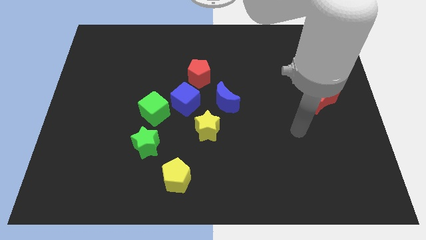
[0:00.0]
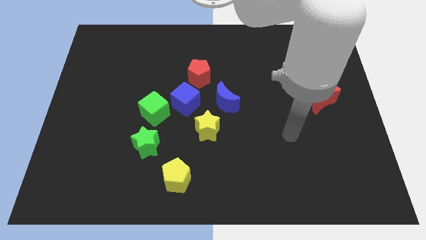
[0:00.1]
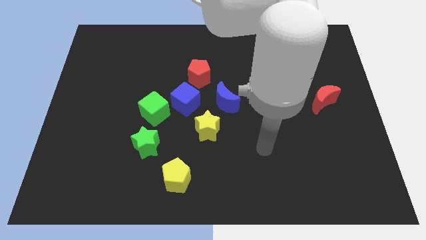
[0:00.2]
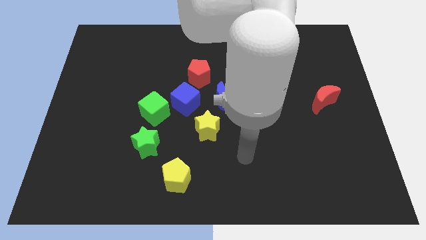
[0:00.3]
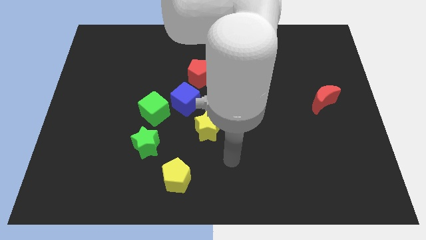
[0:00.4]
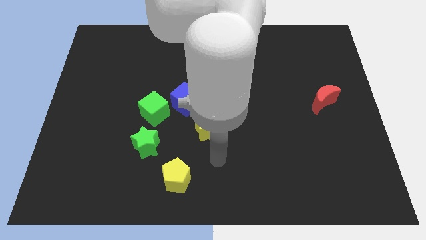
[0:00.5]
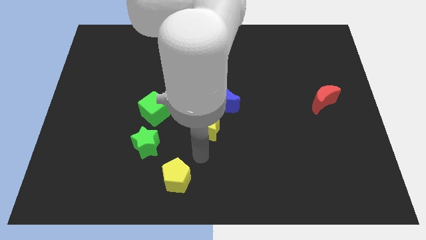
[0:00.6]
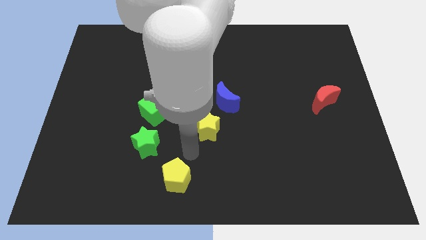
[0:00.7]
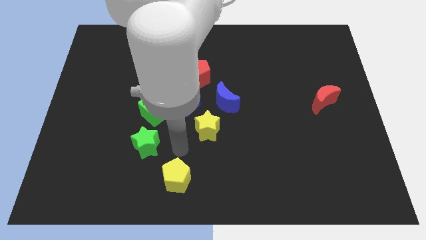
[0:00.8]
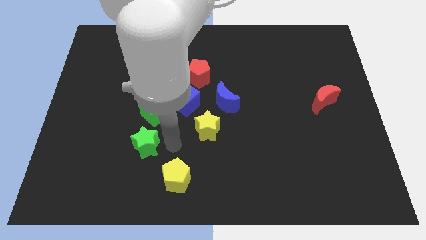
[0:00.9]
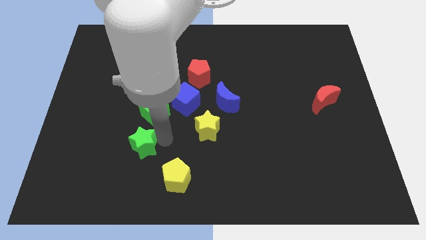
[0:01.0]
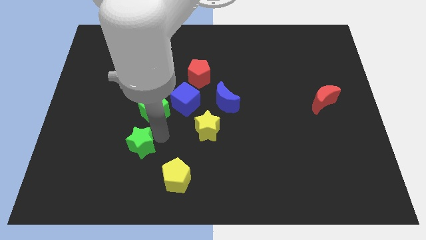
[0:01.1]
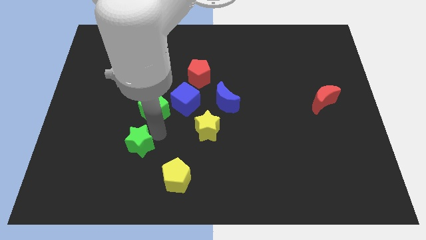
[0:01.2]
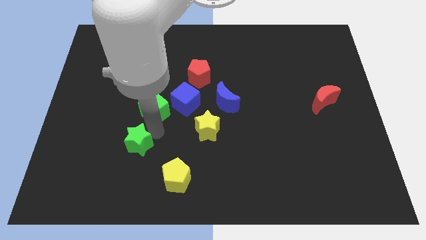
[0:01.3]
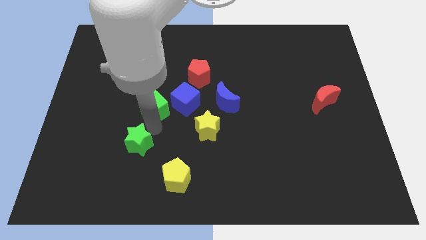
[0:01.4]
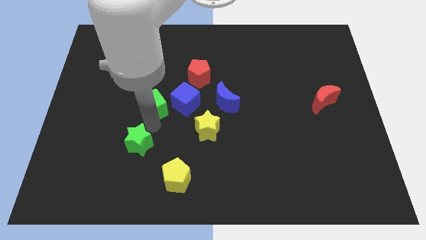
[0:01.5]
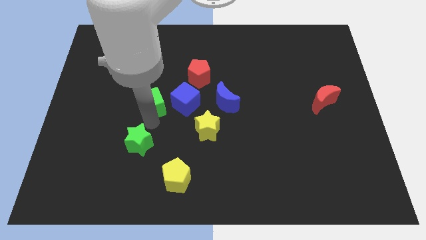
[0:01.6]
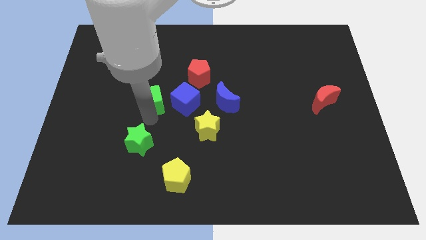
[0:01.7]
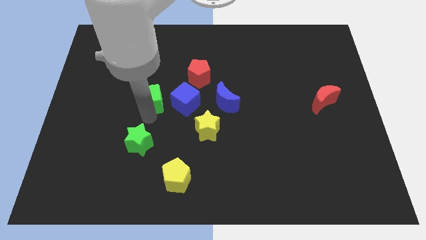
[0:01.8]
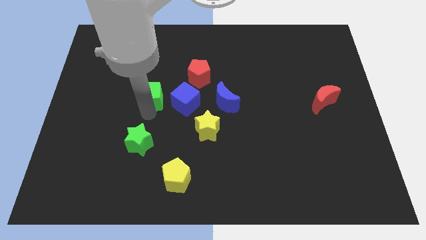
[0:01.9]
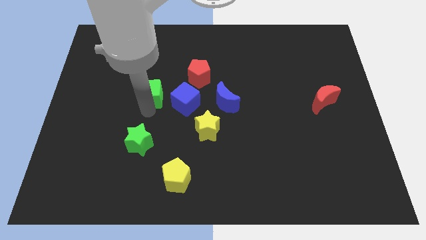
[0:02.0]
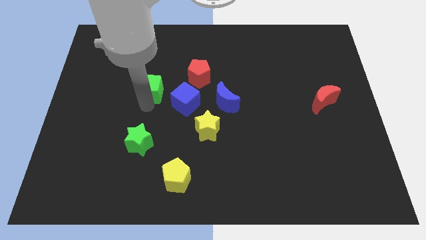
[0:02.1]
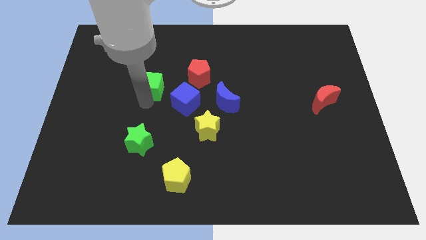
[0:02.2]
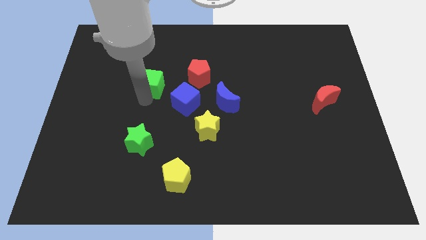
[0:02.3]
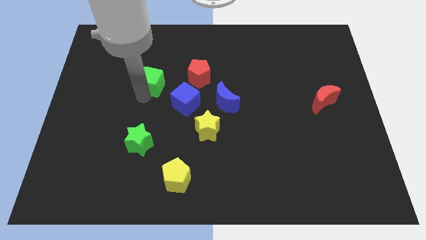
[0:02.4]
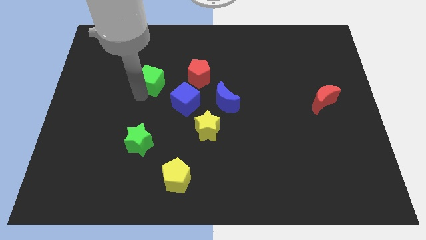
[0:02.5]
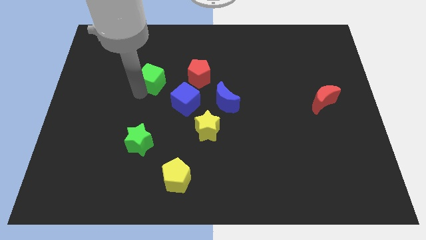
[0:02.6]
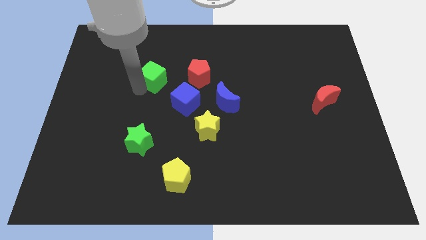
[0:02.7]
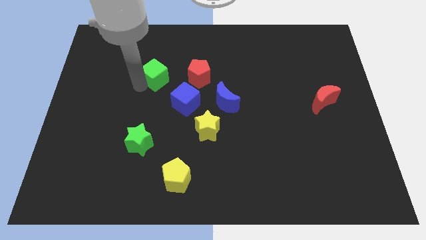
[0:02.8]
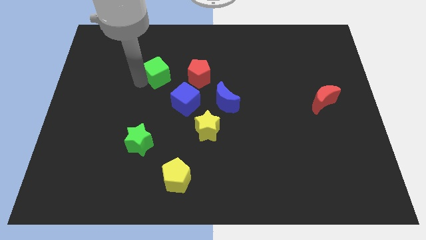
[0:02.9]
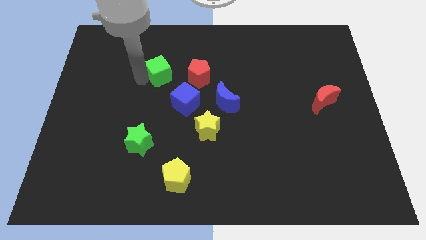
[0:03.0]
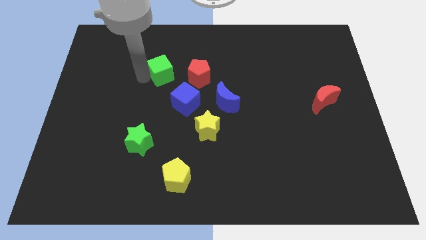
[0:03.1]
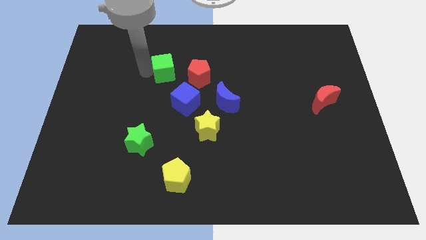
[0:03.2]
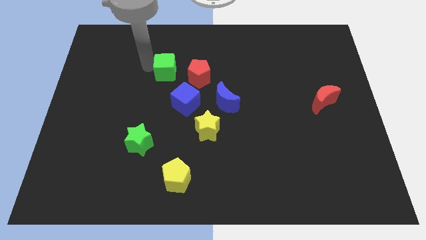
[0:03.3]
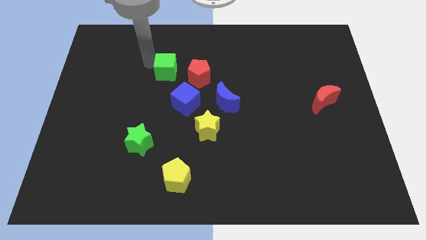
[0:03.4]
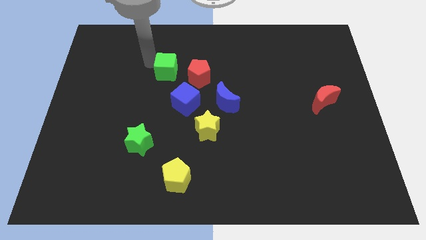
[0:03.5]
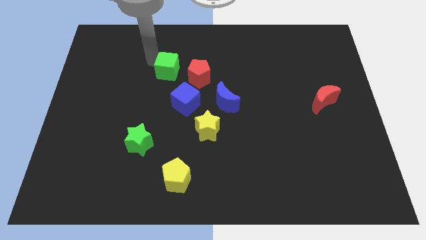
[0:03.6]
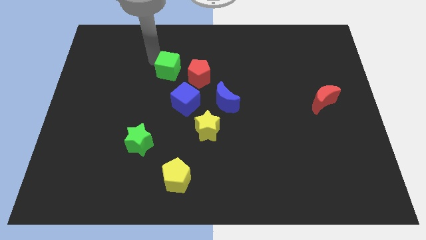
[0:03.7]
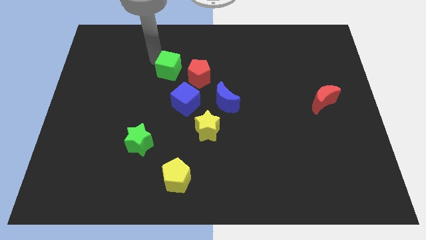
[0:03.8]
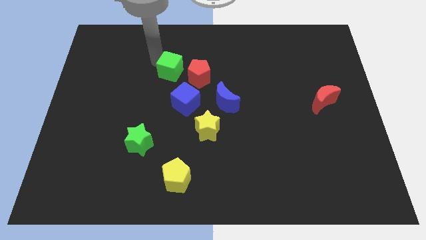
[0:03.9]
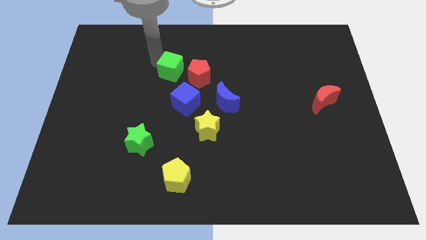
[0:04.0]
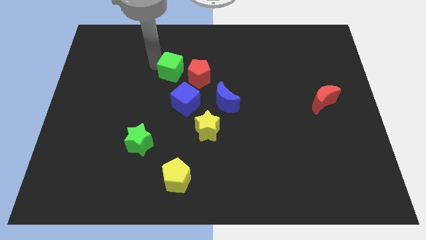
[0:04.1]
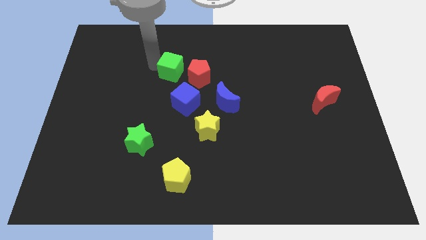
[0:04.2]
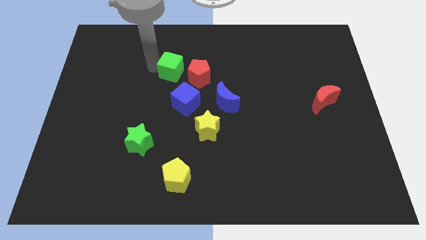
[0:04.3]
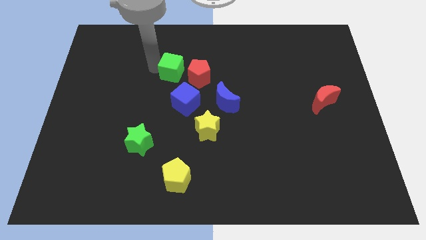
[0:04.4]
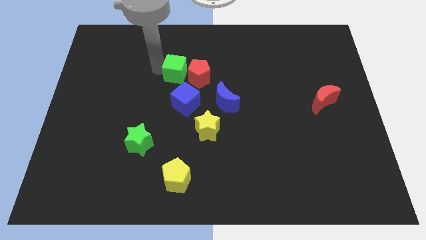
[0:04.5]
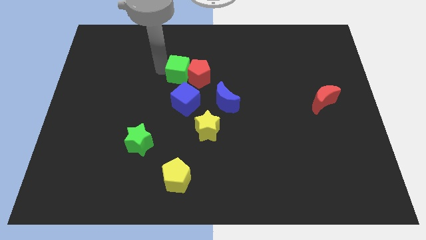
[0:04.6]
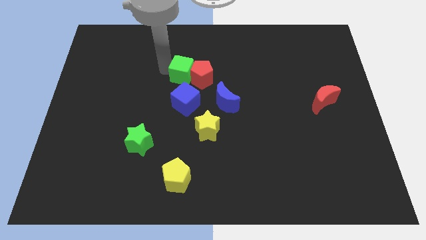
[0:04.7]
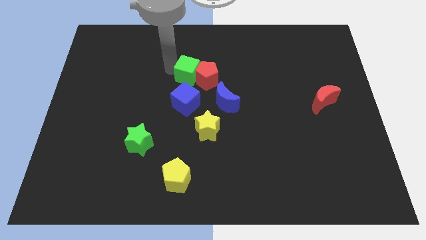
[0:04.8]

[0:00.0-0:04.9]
slide the green cube next to the red pentagon

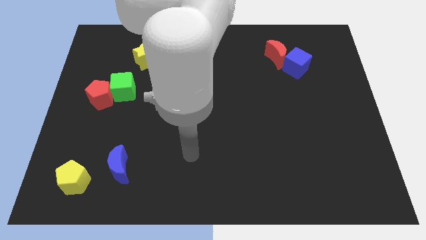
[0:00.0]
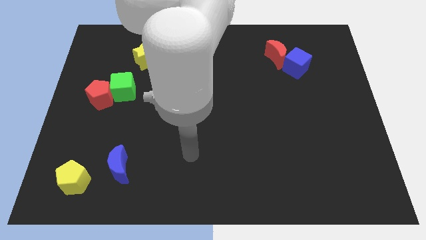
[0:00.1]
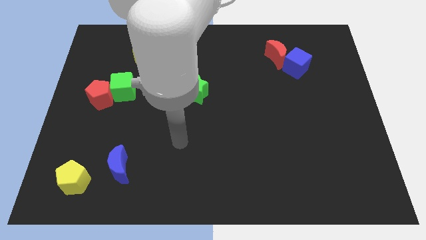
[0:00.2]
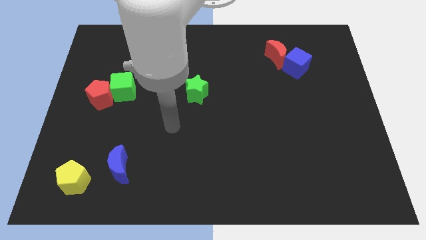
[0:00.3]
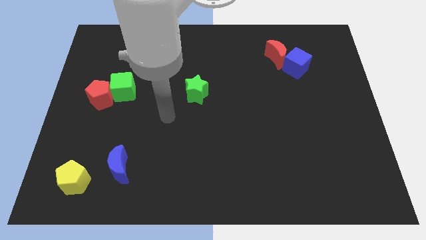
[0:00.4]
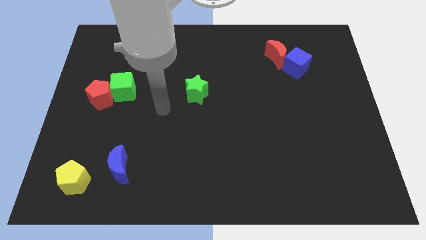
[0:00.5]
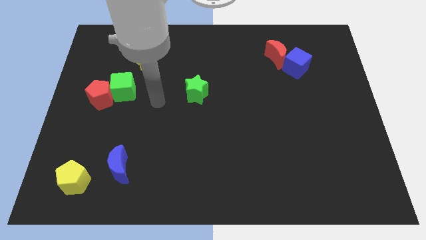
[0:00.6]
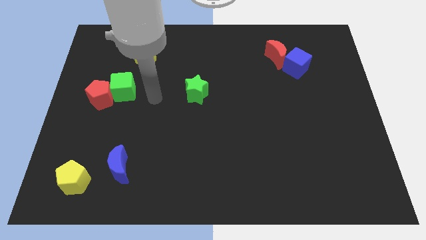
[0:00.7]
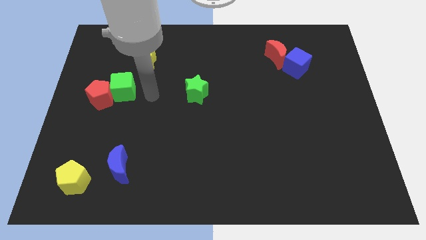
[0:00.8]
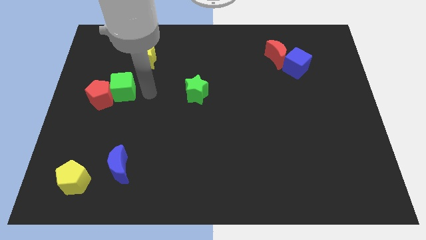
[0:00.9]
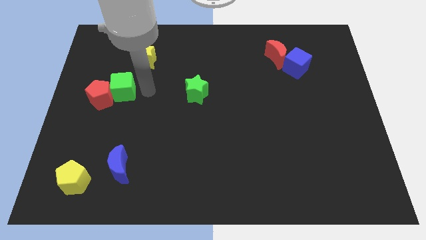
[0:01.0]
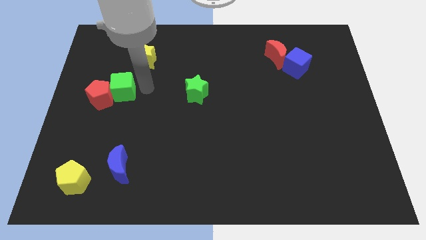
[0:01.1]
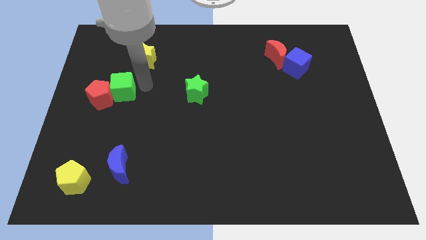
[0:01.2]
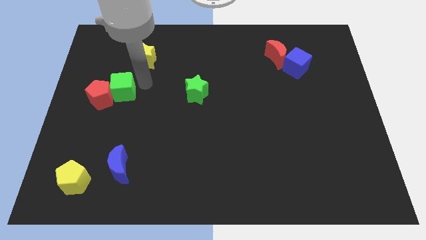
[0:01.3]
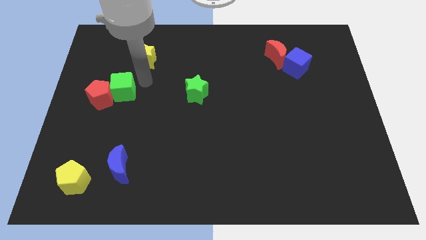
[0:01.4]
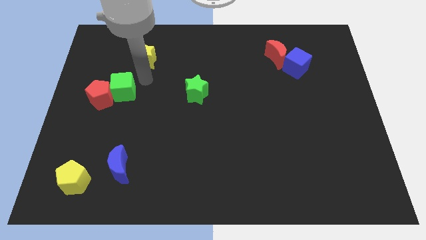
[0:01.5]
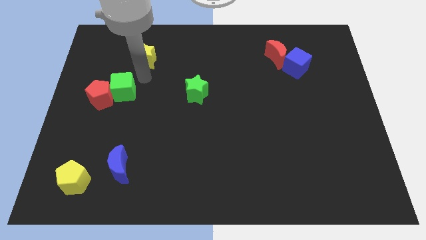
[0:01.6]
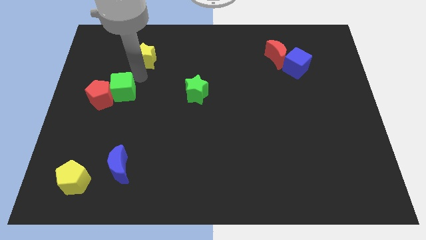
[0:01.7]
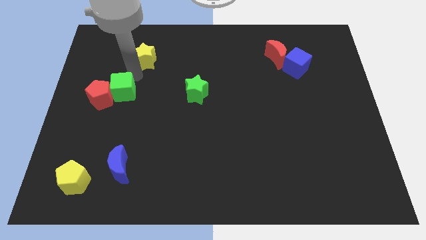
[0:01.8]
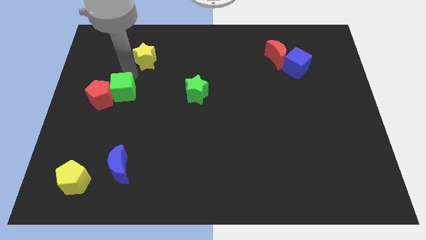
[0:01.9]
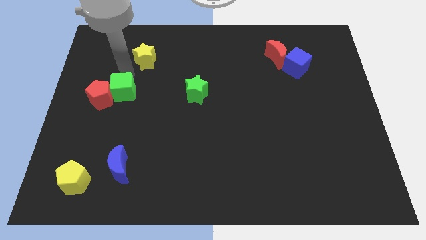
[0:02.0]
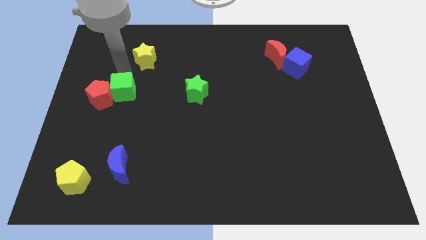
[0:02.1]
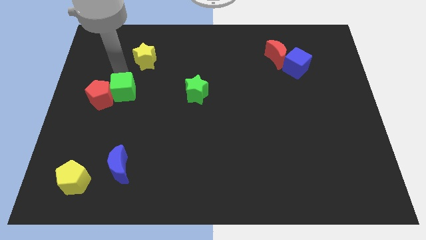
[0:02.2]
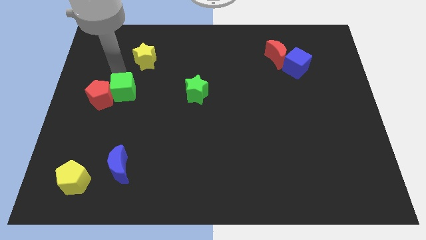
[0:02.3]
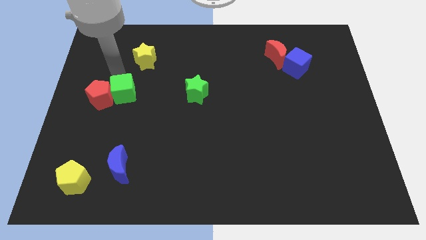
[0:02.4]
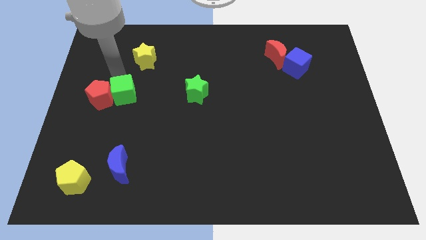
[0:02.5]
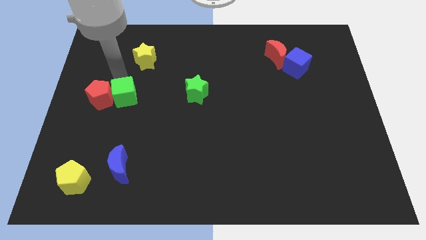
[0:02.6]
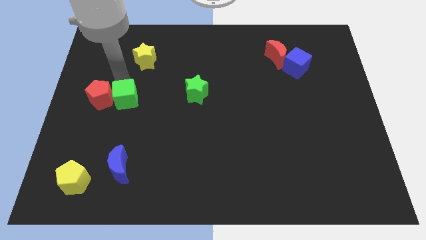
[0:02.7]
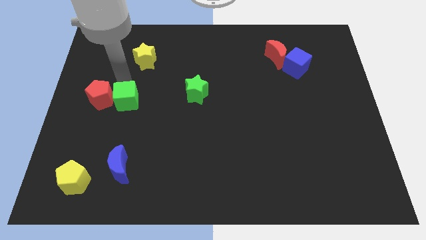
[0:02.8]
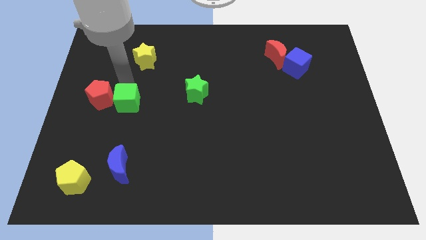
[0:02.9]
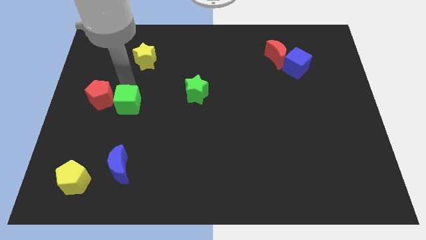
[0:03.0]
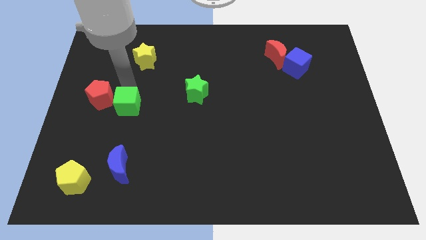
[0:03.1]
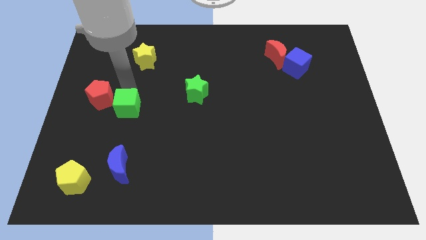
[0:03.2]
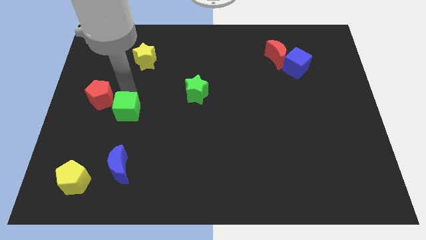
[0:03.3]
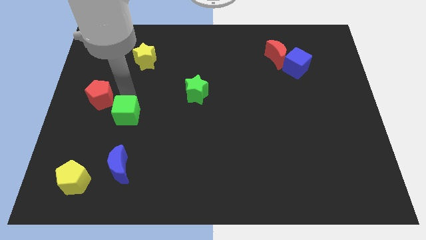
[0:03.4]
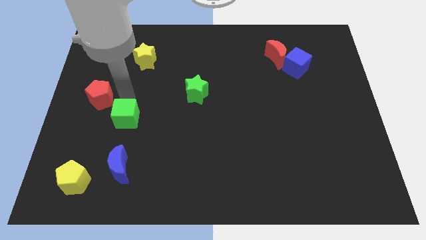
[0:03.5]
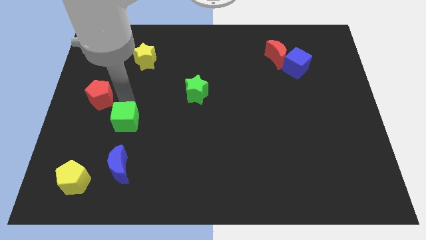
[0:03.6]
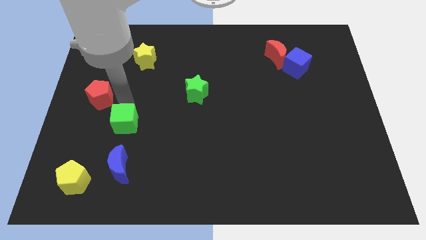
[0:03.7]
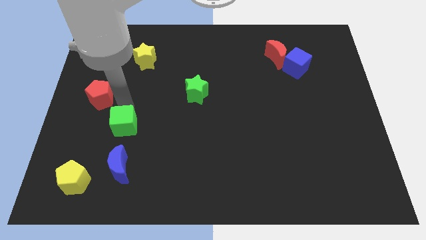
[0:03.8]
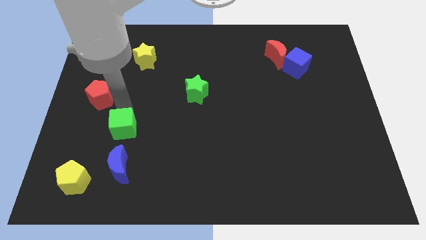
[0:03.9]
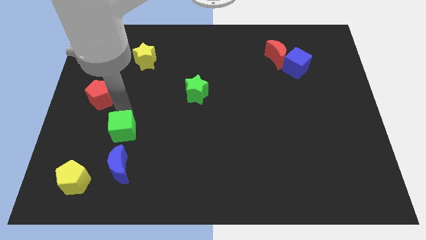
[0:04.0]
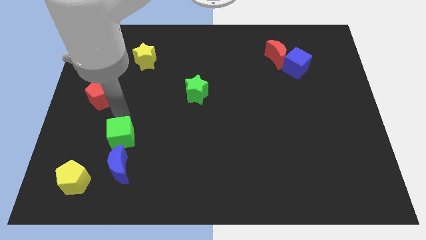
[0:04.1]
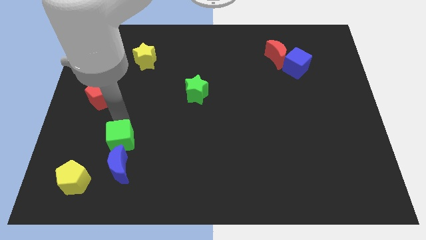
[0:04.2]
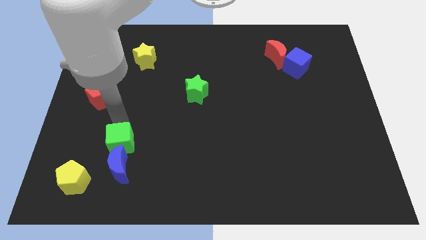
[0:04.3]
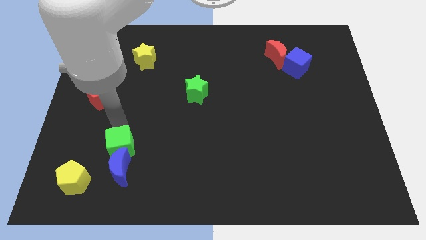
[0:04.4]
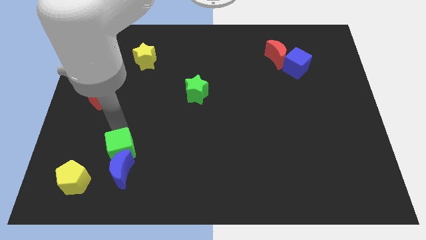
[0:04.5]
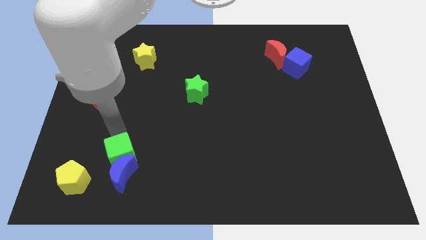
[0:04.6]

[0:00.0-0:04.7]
move the green cube next to the blue moon
